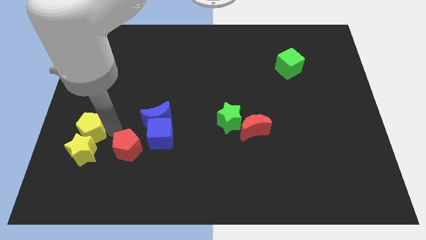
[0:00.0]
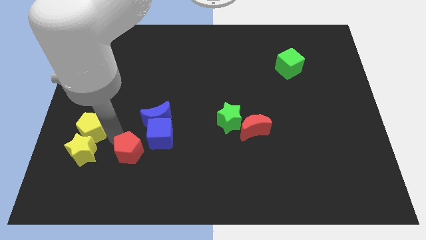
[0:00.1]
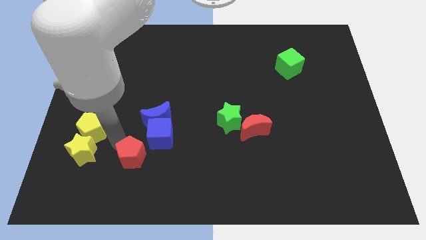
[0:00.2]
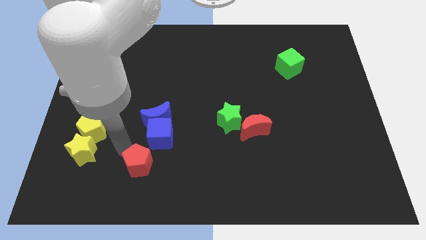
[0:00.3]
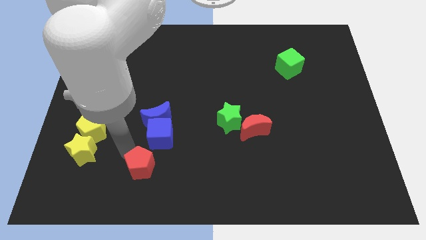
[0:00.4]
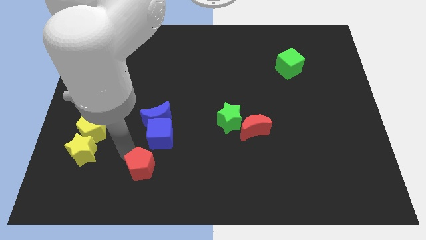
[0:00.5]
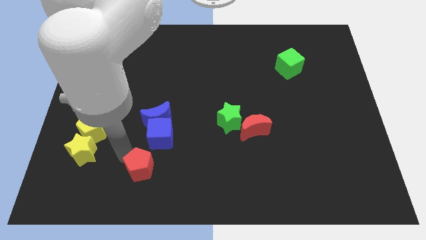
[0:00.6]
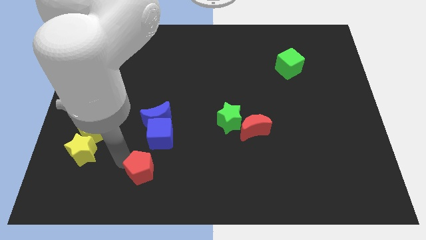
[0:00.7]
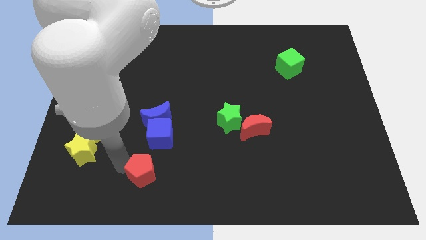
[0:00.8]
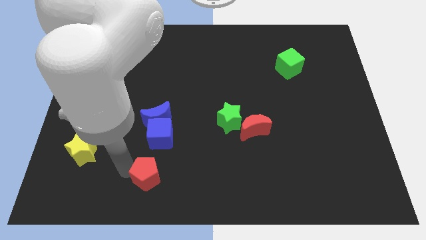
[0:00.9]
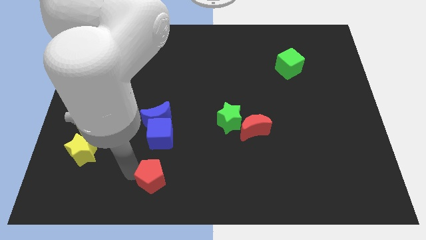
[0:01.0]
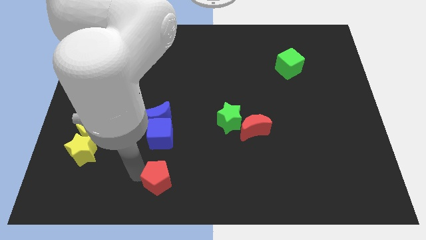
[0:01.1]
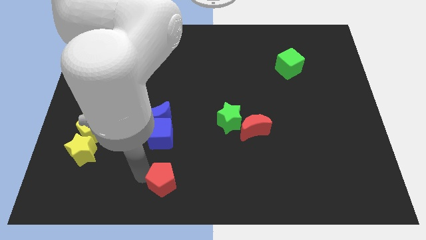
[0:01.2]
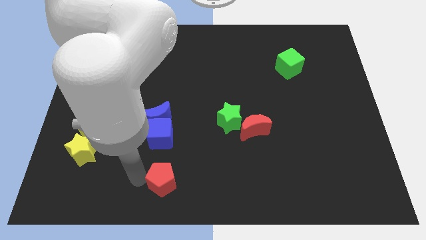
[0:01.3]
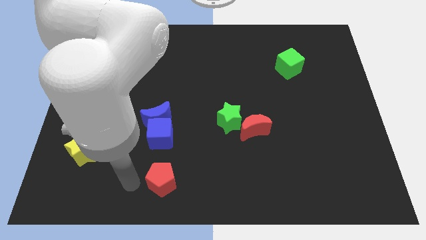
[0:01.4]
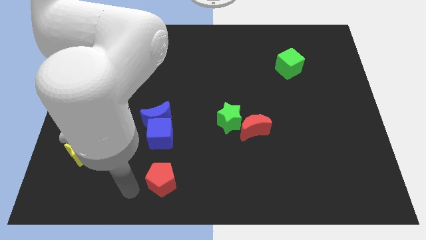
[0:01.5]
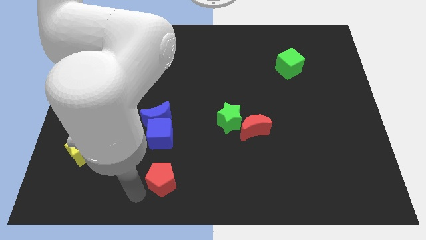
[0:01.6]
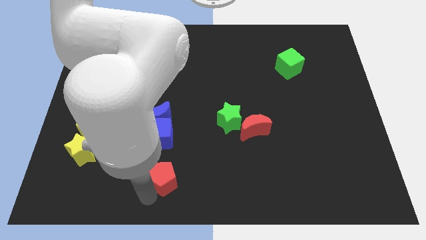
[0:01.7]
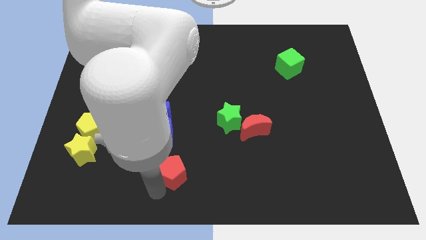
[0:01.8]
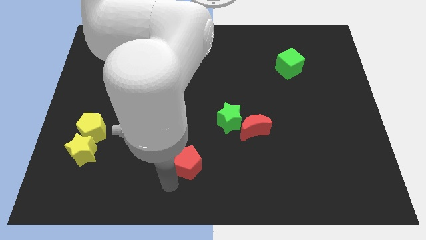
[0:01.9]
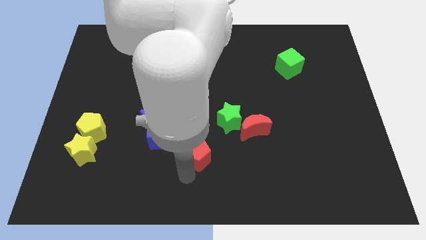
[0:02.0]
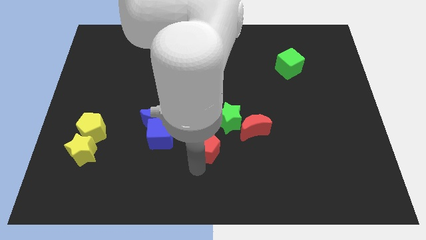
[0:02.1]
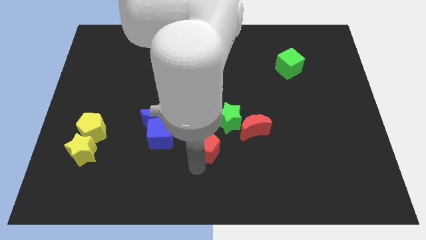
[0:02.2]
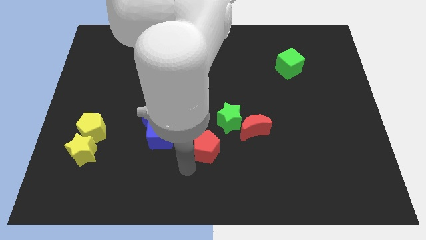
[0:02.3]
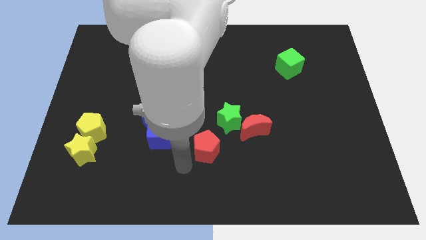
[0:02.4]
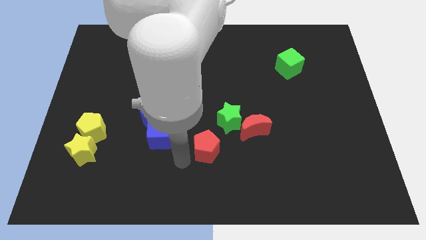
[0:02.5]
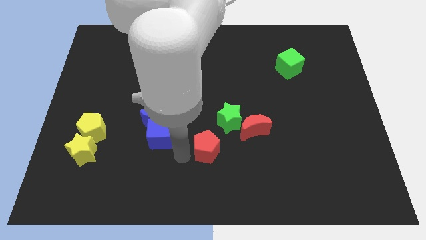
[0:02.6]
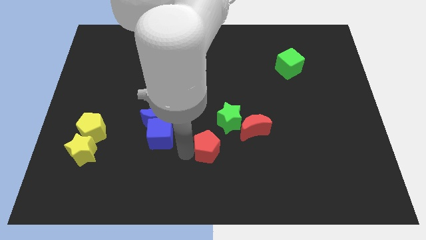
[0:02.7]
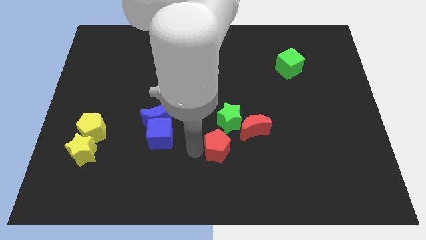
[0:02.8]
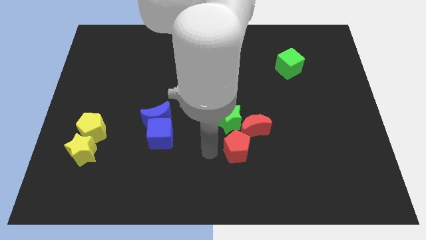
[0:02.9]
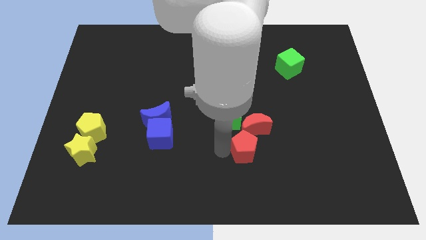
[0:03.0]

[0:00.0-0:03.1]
move the red pentagon into the red crescent

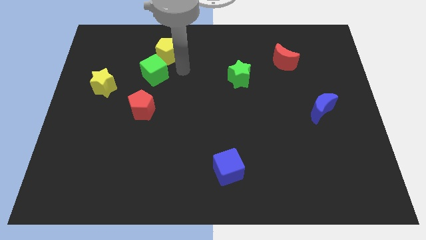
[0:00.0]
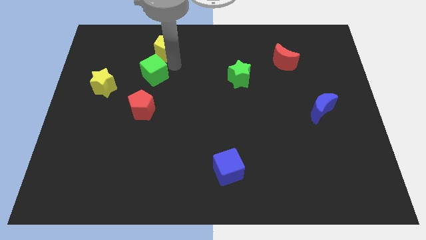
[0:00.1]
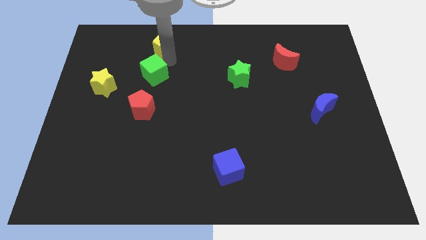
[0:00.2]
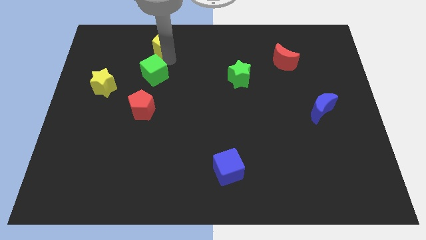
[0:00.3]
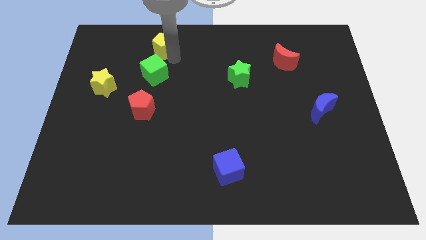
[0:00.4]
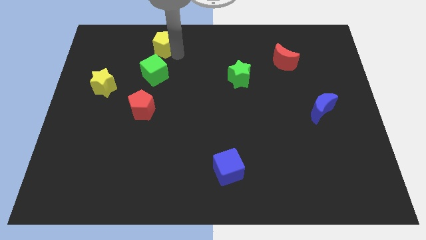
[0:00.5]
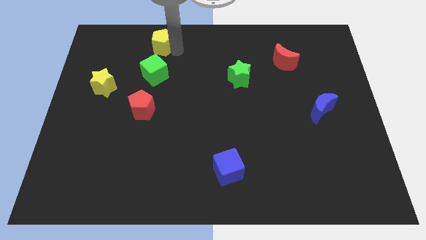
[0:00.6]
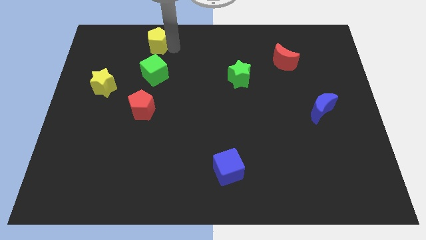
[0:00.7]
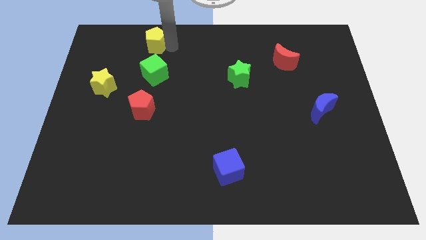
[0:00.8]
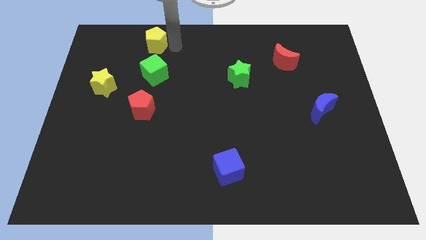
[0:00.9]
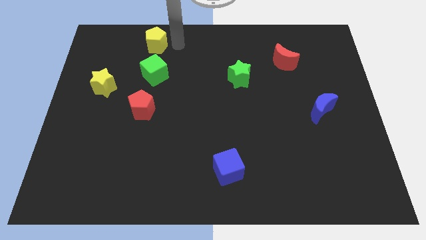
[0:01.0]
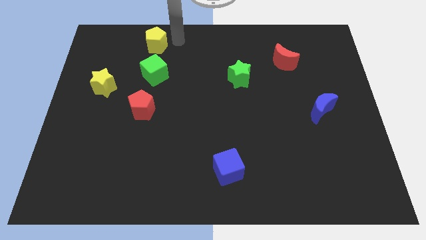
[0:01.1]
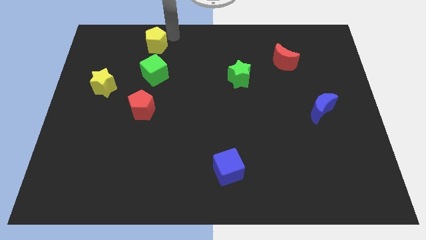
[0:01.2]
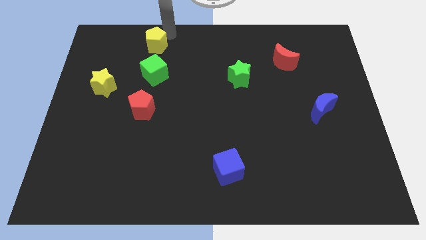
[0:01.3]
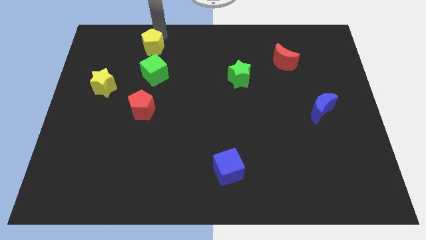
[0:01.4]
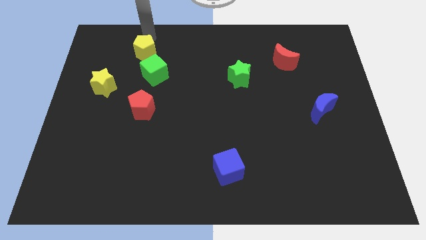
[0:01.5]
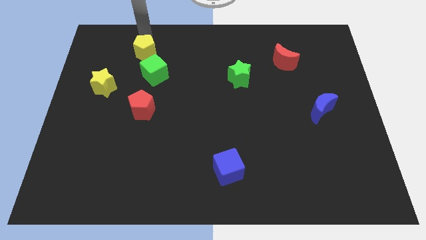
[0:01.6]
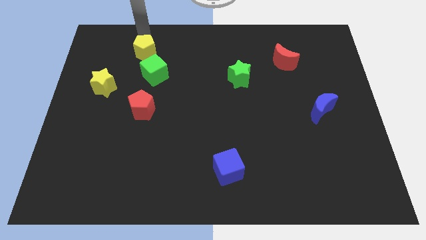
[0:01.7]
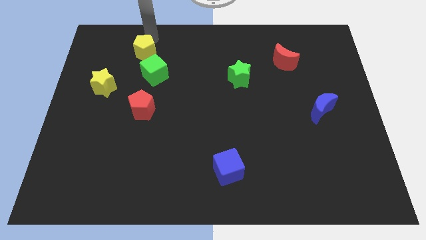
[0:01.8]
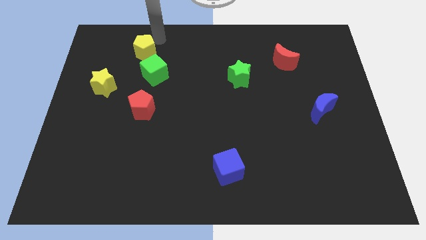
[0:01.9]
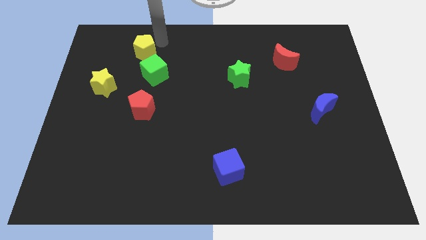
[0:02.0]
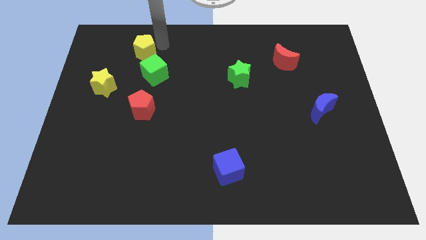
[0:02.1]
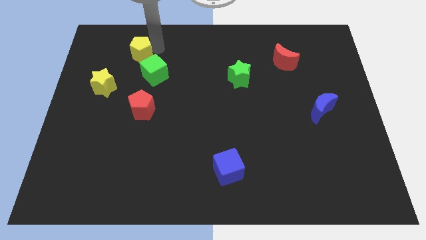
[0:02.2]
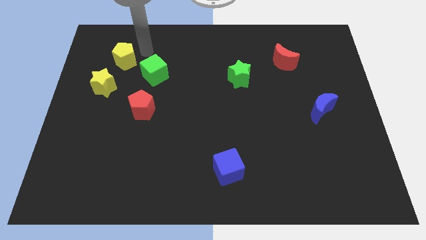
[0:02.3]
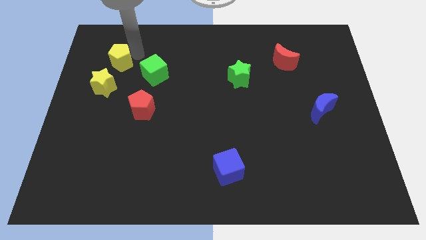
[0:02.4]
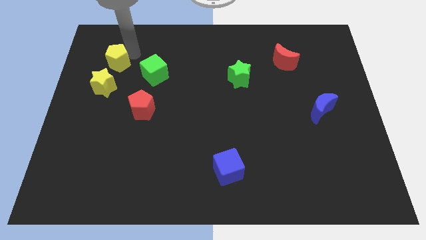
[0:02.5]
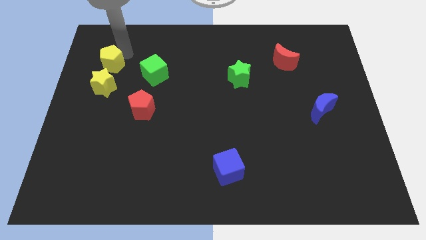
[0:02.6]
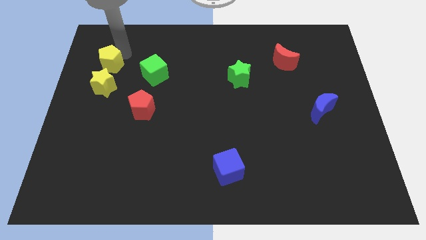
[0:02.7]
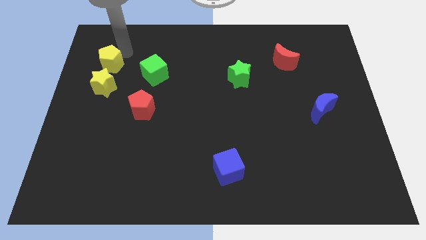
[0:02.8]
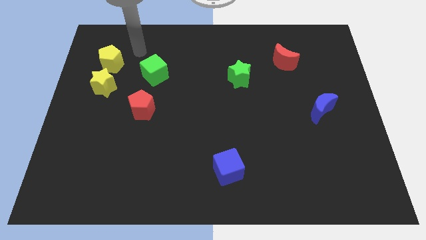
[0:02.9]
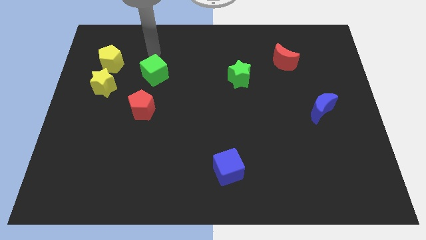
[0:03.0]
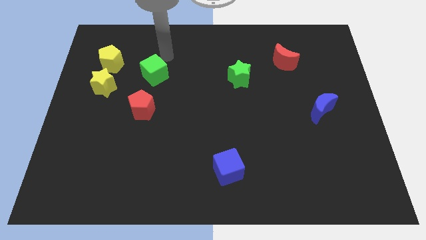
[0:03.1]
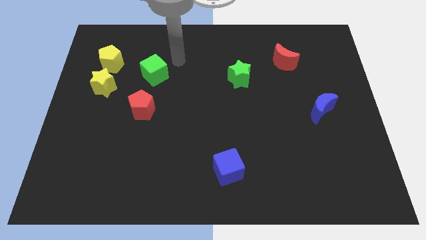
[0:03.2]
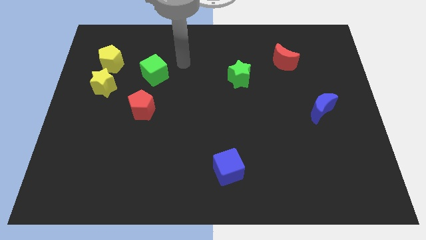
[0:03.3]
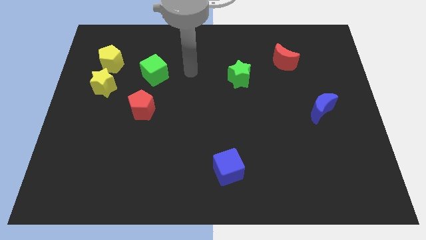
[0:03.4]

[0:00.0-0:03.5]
move the yellow pentagon above the yellow star

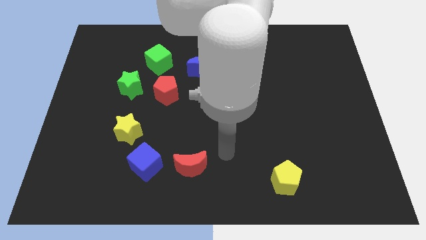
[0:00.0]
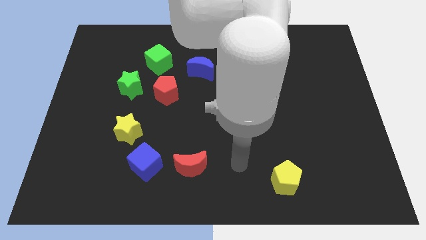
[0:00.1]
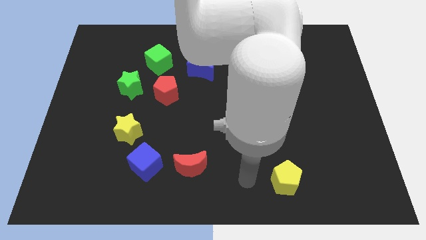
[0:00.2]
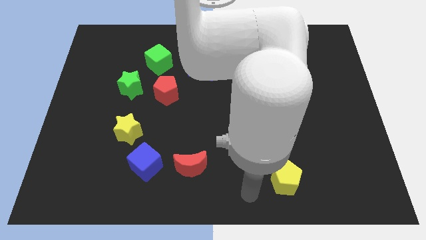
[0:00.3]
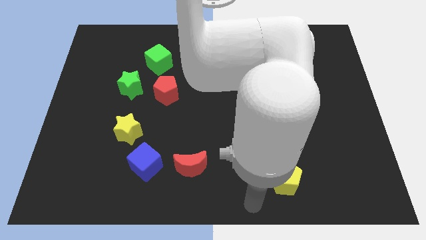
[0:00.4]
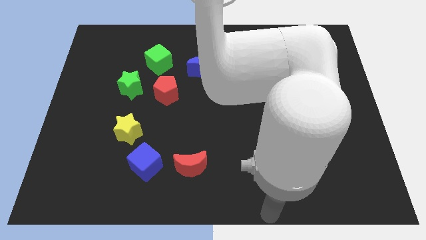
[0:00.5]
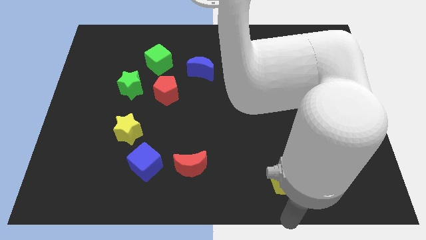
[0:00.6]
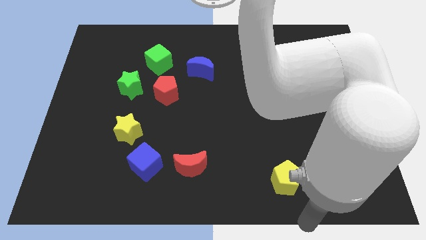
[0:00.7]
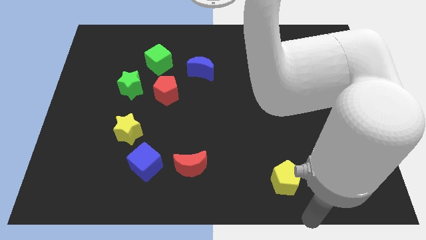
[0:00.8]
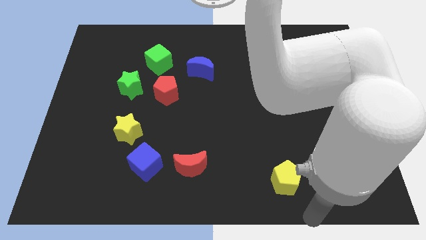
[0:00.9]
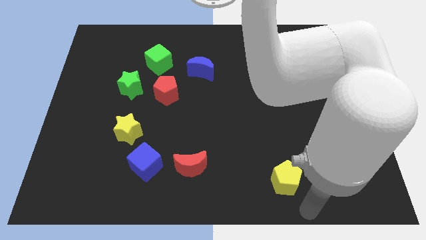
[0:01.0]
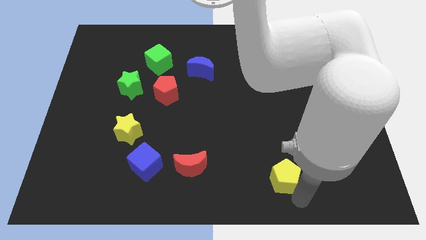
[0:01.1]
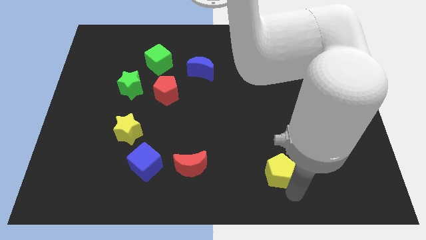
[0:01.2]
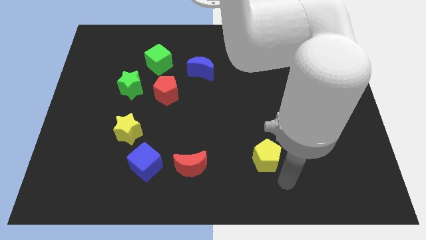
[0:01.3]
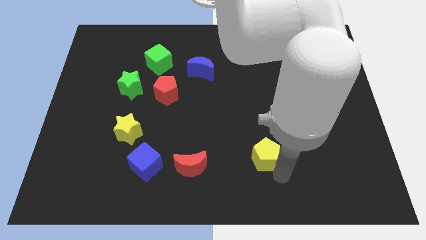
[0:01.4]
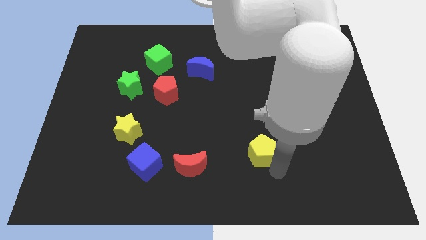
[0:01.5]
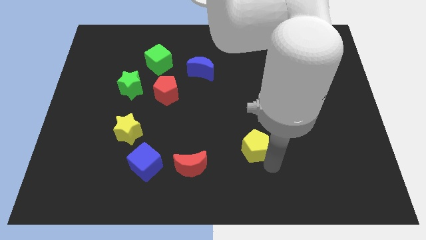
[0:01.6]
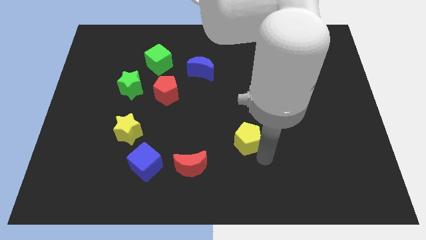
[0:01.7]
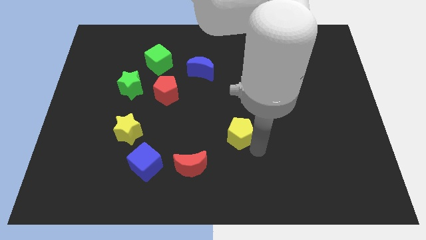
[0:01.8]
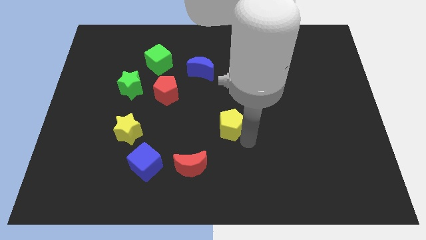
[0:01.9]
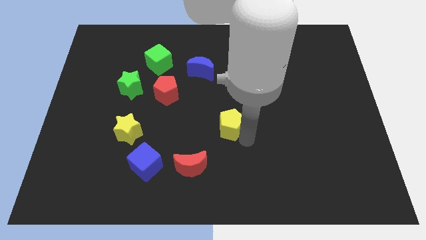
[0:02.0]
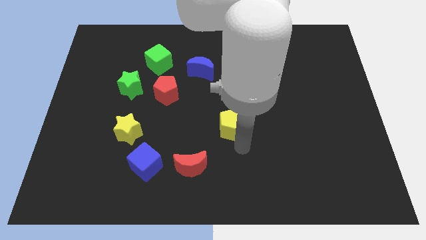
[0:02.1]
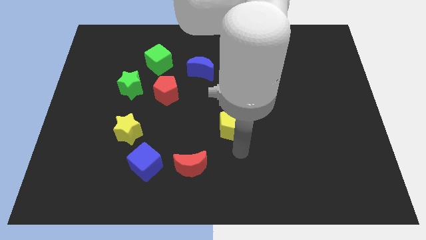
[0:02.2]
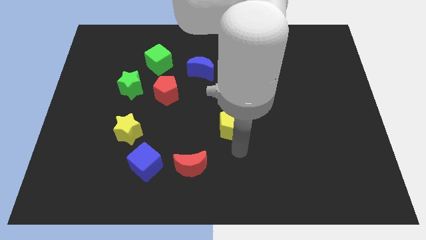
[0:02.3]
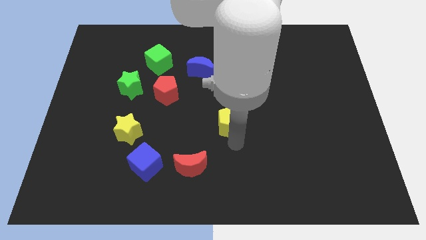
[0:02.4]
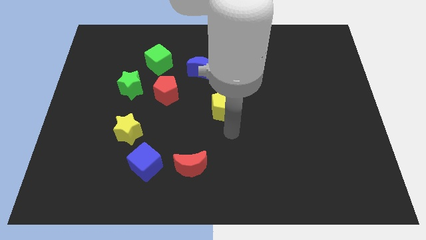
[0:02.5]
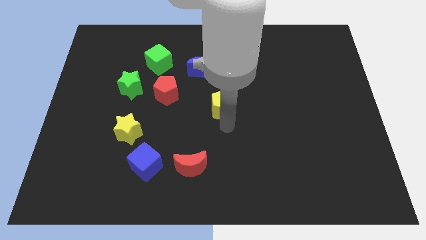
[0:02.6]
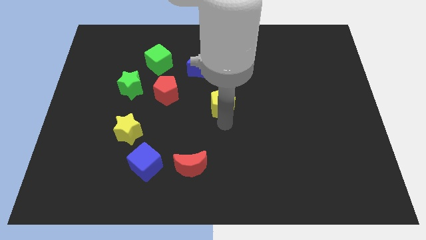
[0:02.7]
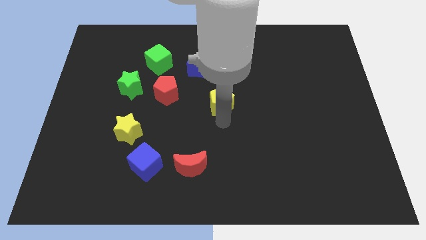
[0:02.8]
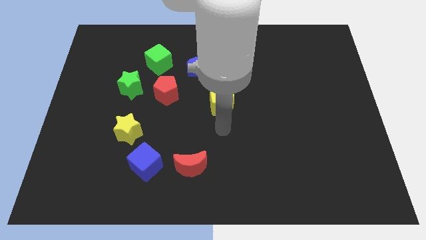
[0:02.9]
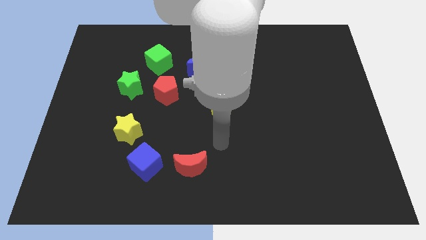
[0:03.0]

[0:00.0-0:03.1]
push the yellow pentagon slightly towards the blue crescent
